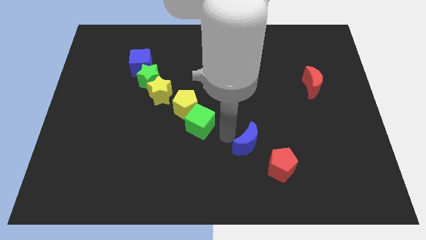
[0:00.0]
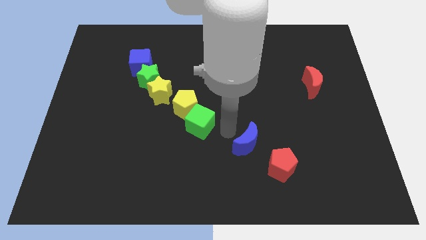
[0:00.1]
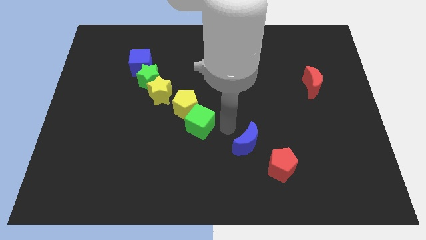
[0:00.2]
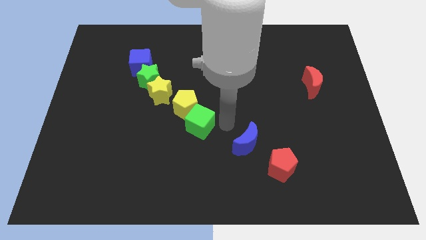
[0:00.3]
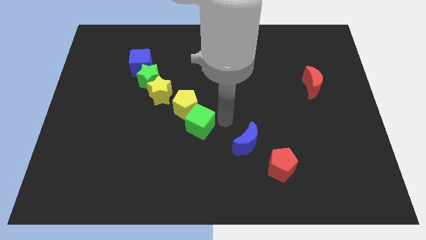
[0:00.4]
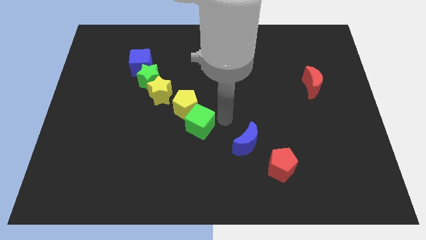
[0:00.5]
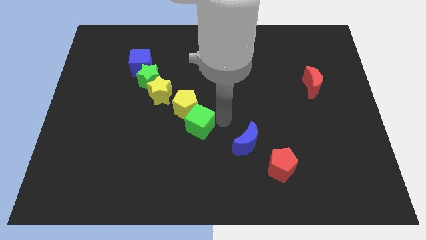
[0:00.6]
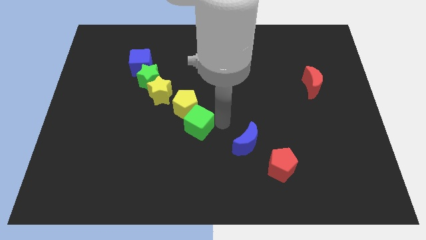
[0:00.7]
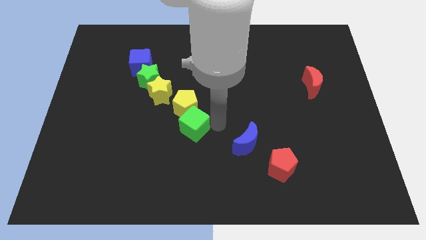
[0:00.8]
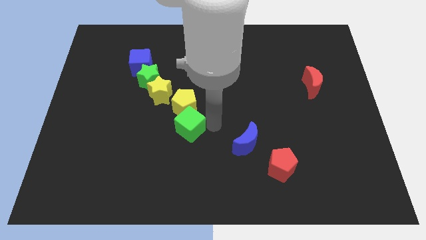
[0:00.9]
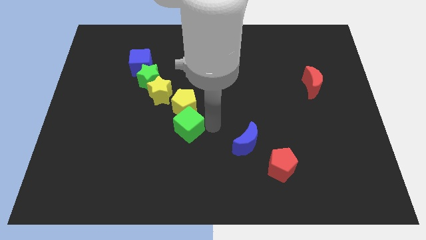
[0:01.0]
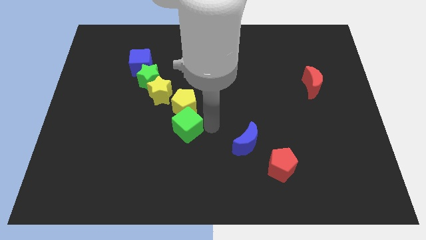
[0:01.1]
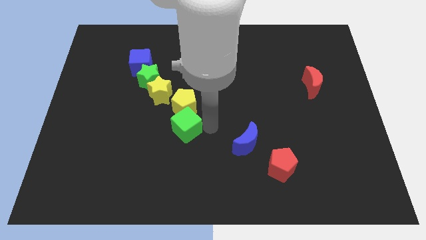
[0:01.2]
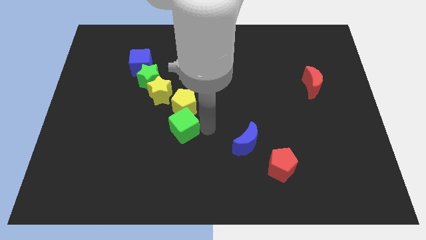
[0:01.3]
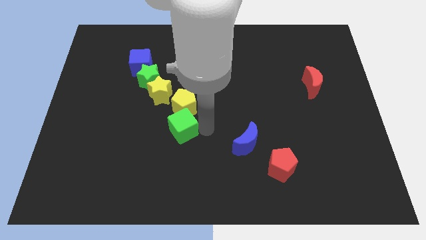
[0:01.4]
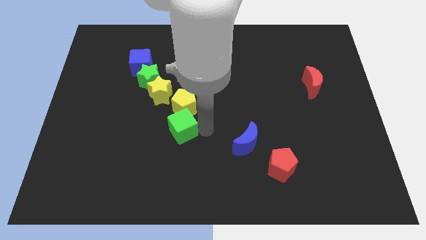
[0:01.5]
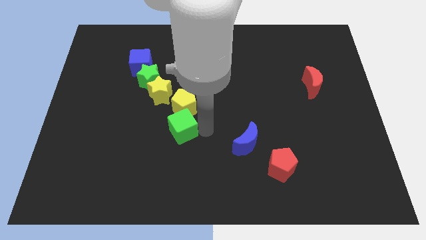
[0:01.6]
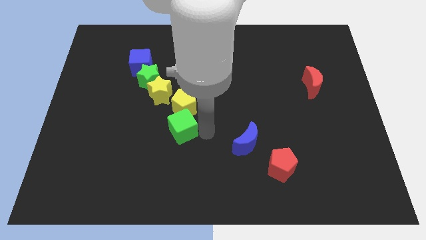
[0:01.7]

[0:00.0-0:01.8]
slightly push the green cube to the left

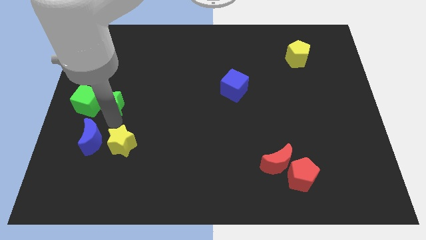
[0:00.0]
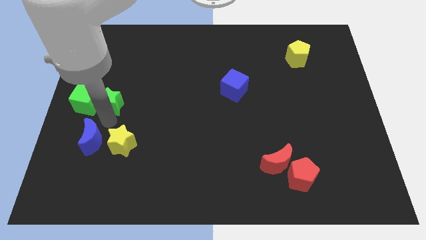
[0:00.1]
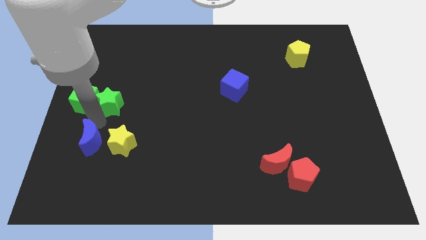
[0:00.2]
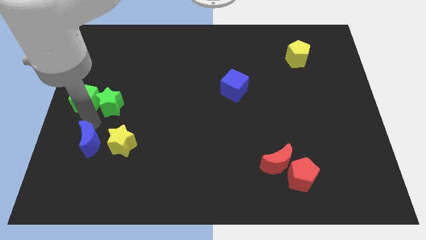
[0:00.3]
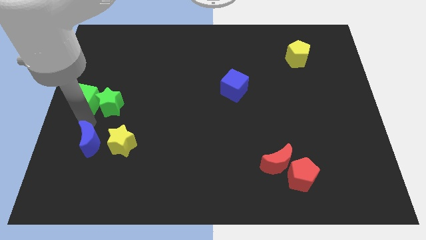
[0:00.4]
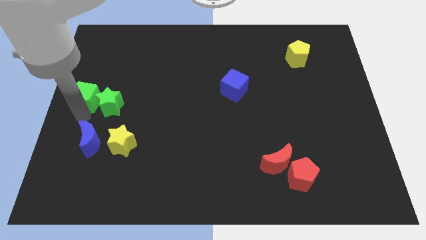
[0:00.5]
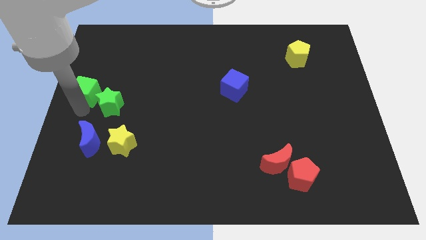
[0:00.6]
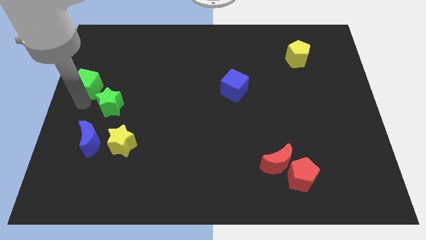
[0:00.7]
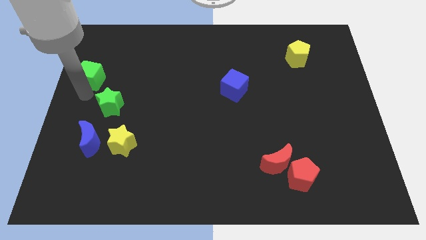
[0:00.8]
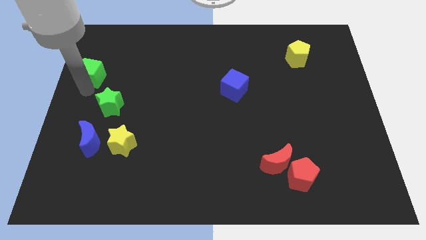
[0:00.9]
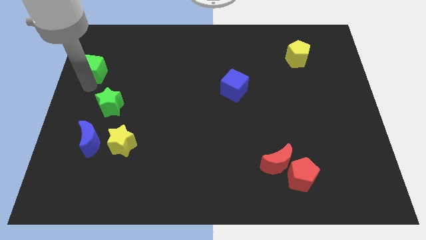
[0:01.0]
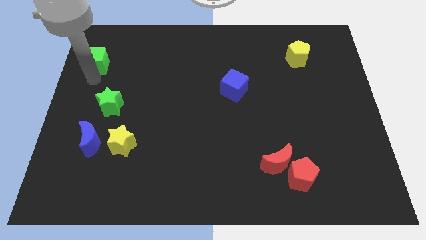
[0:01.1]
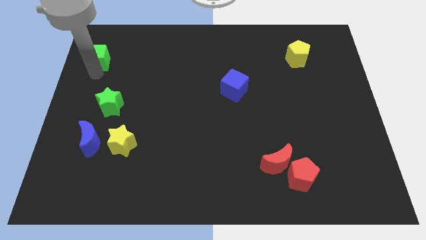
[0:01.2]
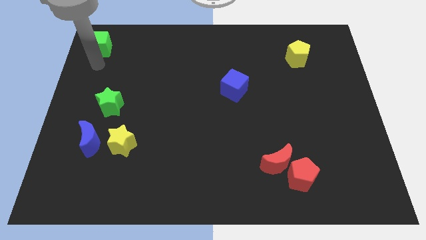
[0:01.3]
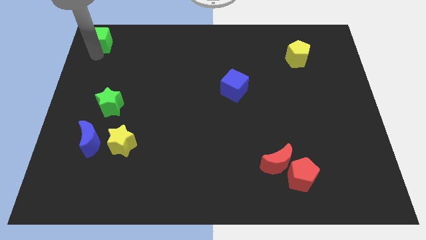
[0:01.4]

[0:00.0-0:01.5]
move the green cube away from the green star

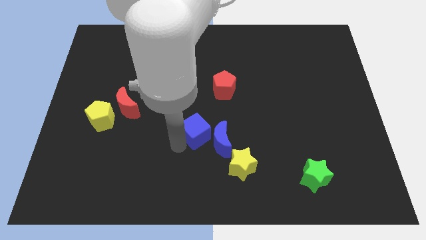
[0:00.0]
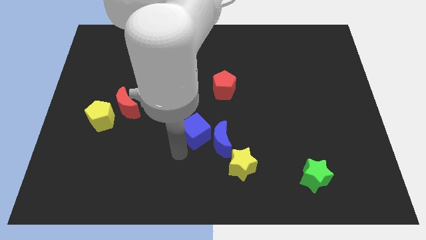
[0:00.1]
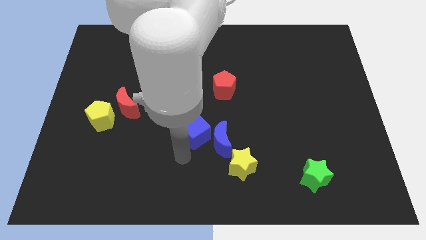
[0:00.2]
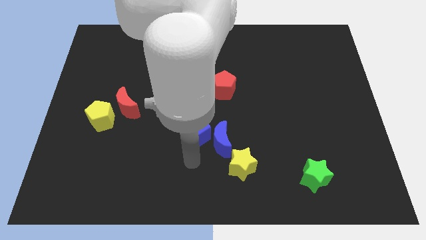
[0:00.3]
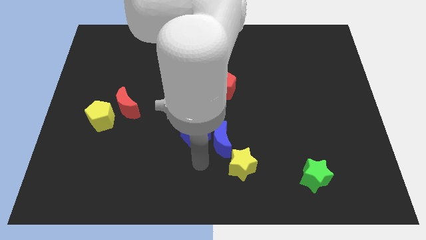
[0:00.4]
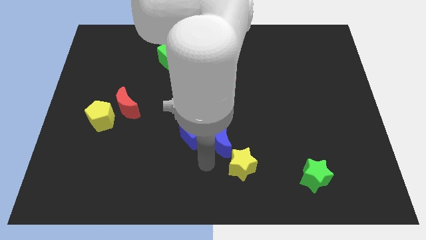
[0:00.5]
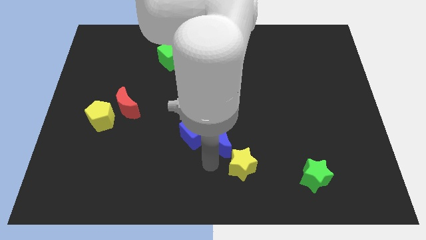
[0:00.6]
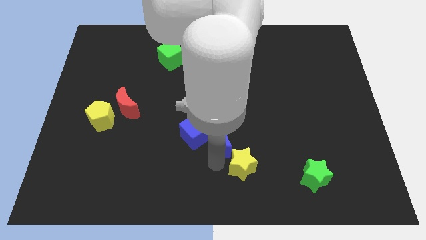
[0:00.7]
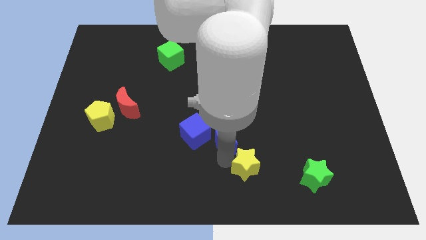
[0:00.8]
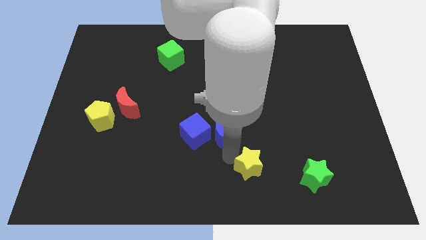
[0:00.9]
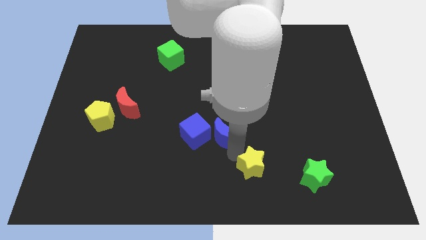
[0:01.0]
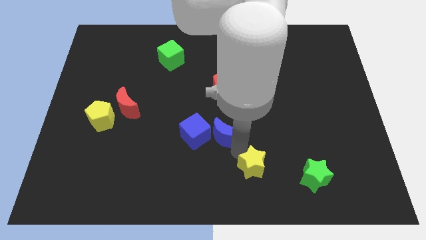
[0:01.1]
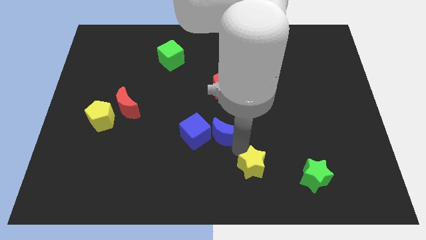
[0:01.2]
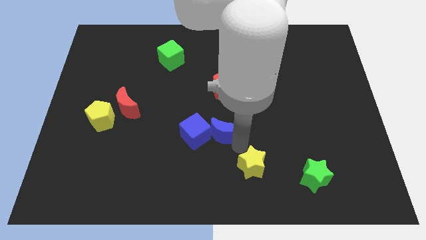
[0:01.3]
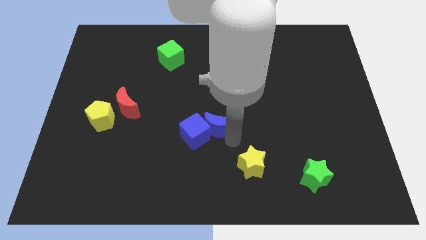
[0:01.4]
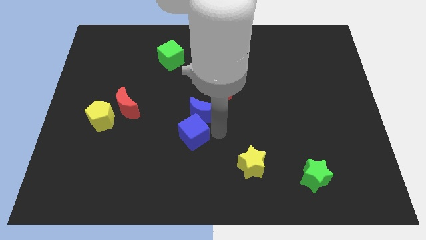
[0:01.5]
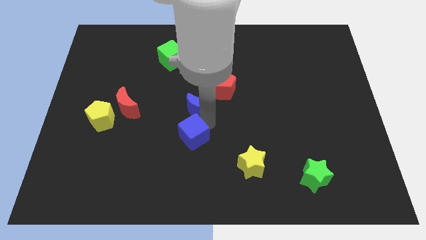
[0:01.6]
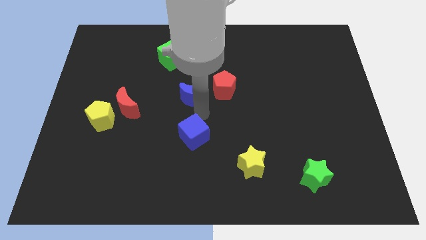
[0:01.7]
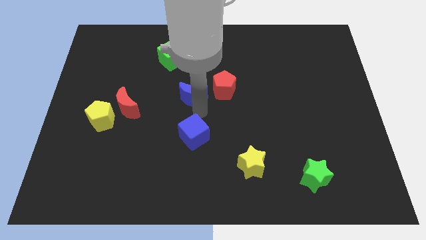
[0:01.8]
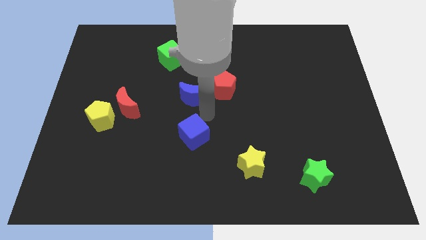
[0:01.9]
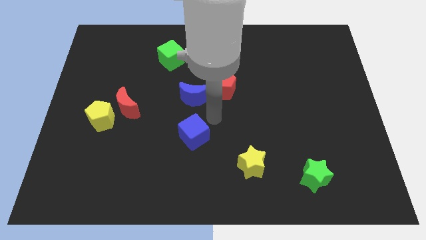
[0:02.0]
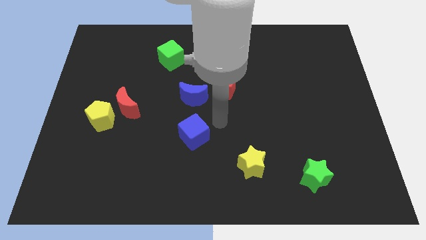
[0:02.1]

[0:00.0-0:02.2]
move the blue crescent parallel to the left red pentagon

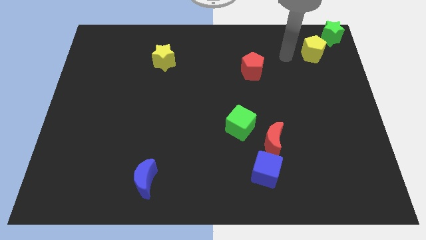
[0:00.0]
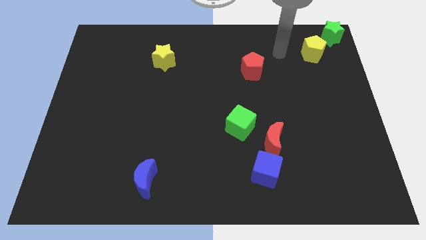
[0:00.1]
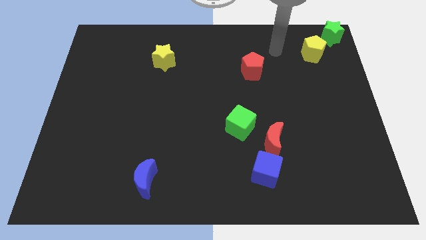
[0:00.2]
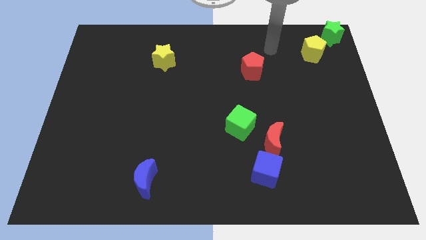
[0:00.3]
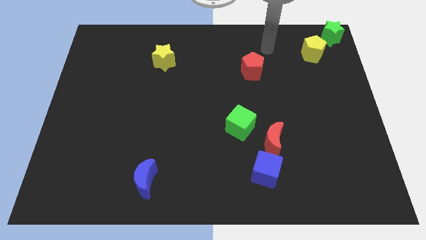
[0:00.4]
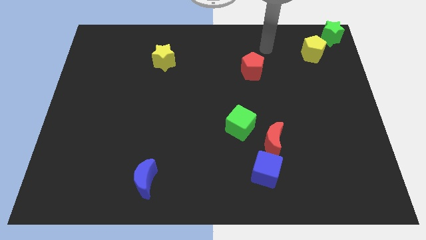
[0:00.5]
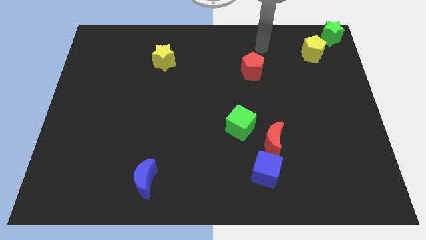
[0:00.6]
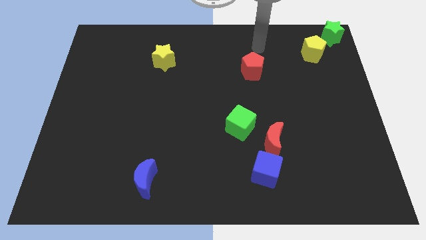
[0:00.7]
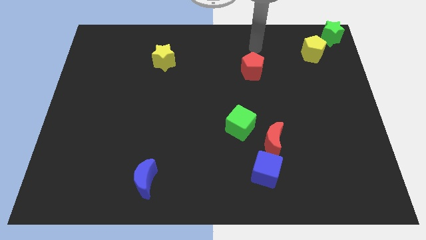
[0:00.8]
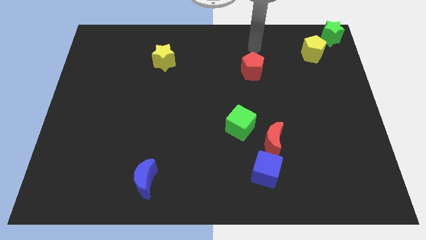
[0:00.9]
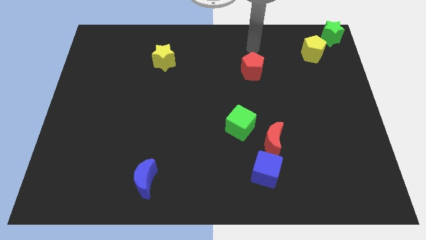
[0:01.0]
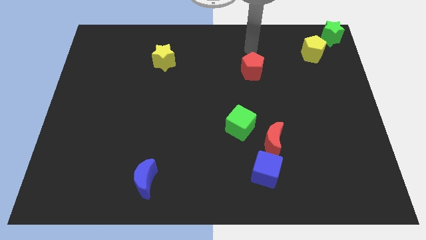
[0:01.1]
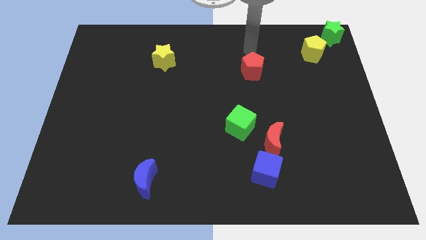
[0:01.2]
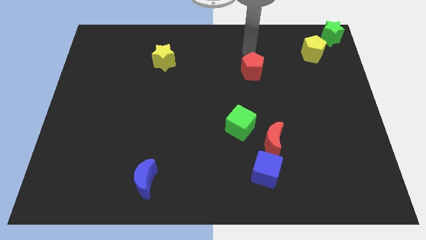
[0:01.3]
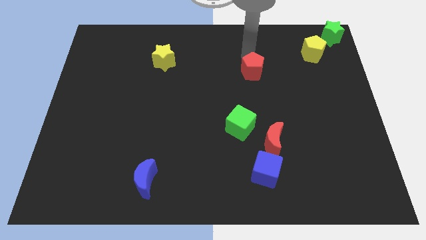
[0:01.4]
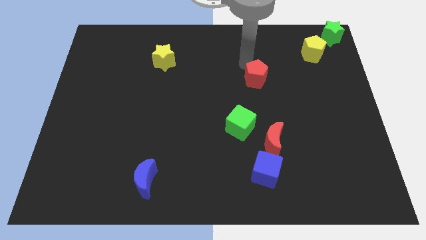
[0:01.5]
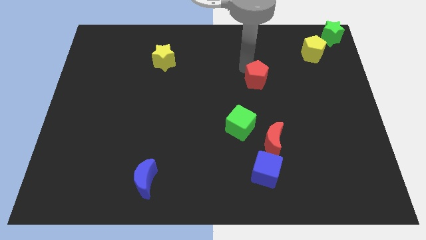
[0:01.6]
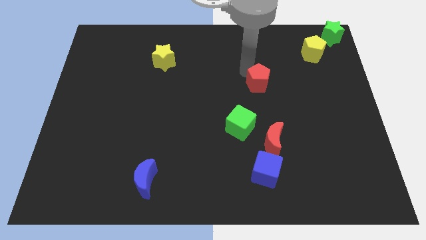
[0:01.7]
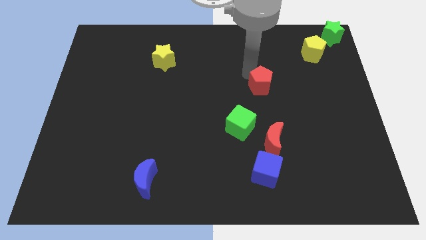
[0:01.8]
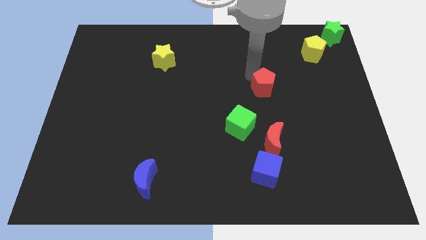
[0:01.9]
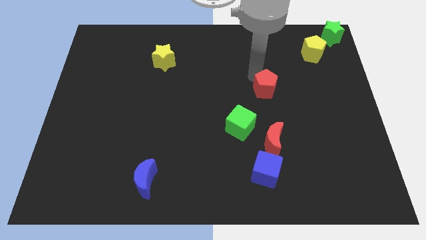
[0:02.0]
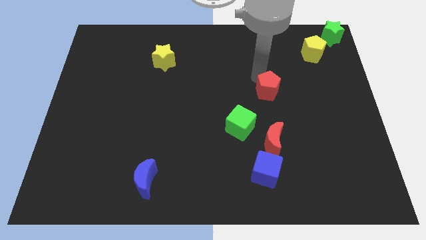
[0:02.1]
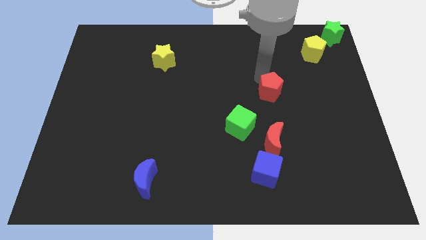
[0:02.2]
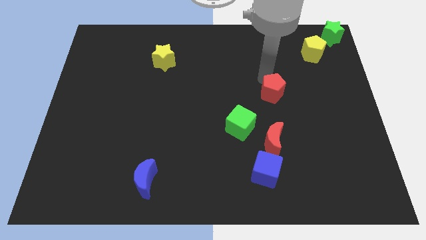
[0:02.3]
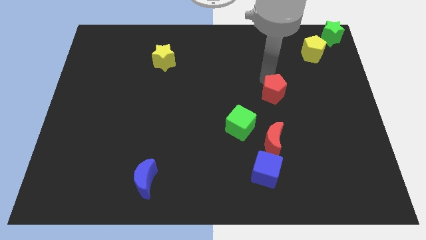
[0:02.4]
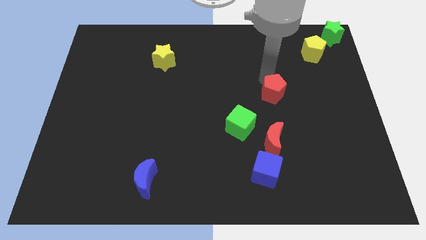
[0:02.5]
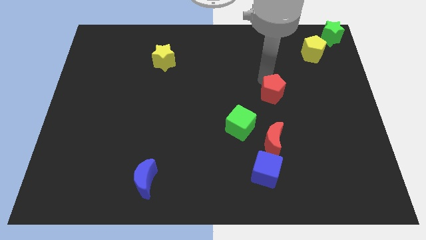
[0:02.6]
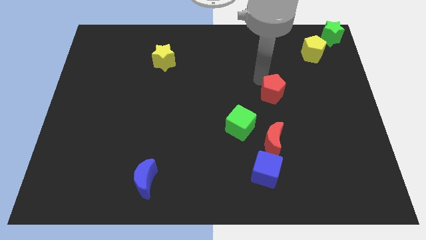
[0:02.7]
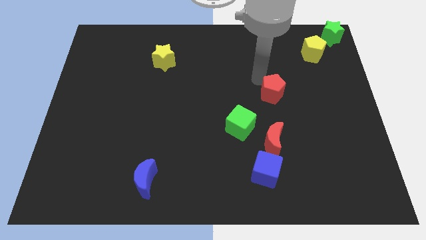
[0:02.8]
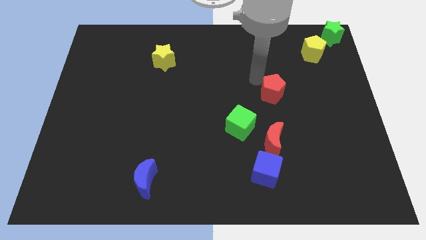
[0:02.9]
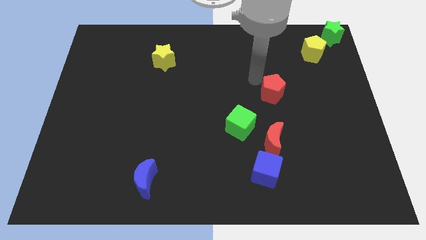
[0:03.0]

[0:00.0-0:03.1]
move the red pentagon to the right side

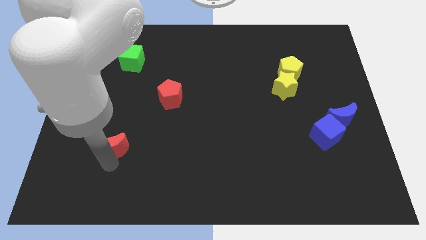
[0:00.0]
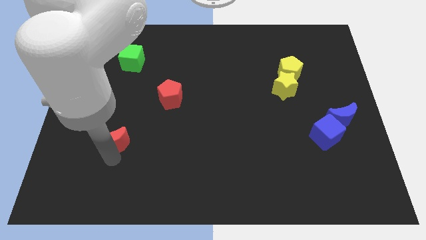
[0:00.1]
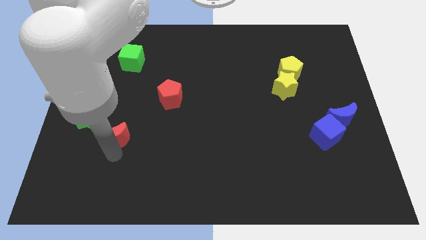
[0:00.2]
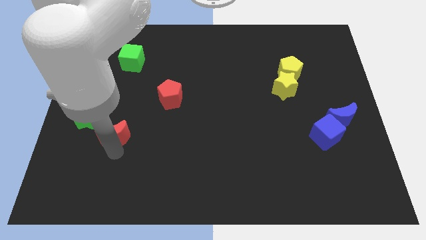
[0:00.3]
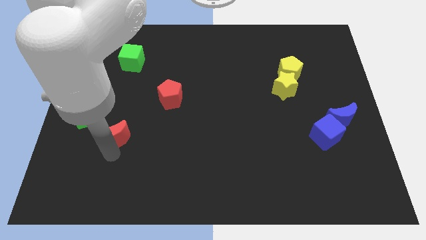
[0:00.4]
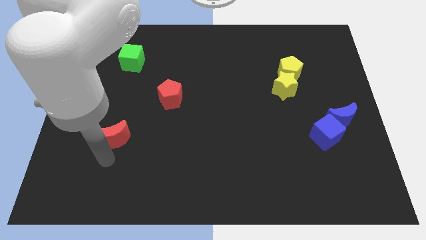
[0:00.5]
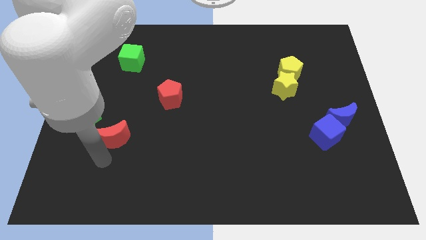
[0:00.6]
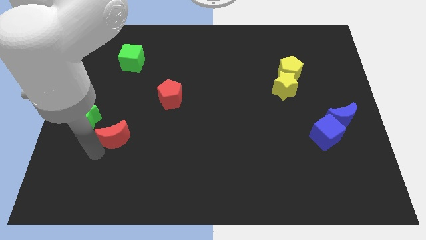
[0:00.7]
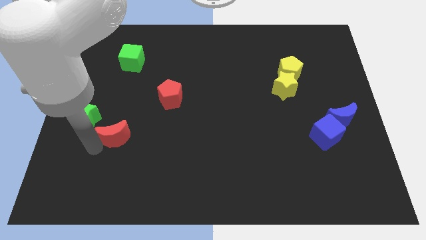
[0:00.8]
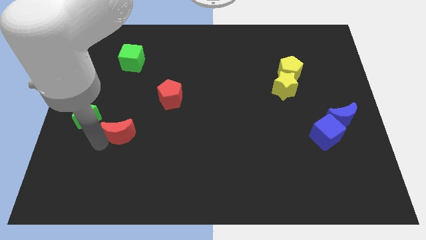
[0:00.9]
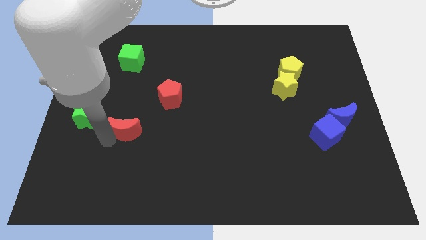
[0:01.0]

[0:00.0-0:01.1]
place the red moon to the right of the green star
